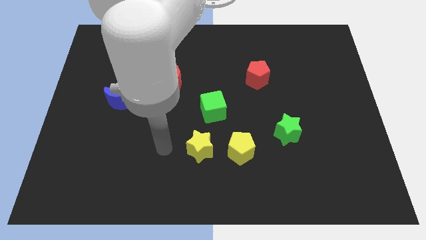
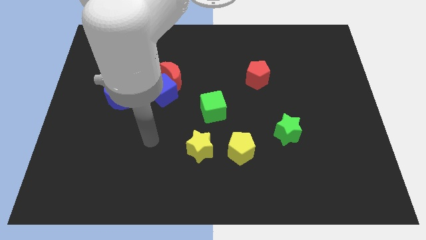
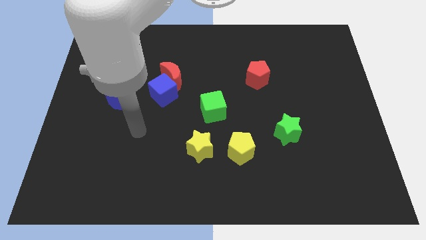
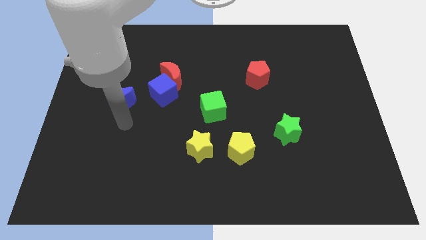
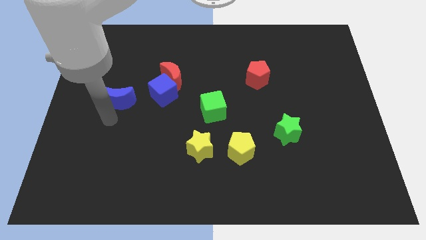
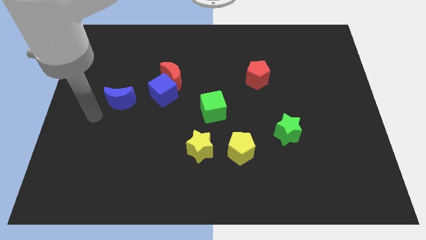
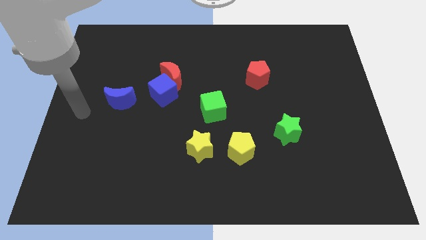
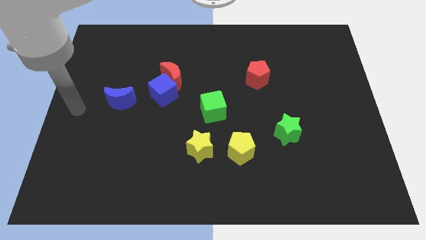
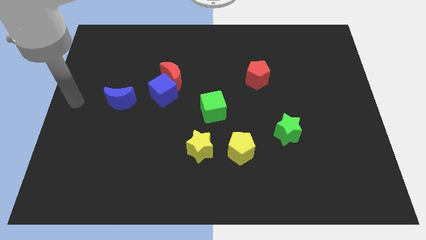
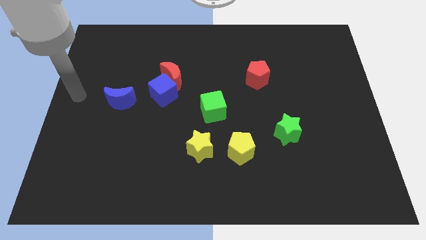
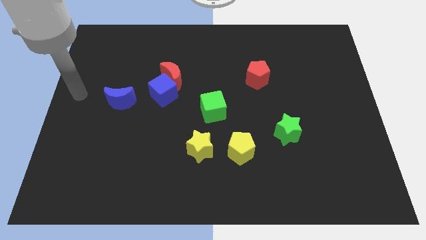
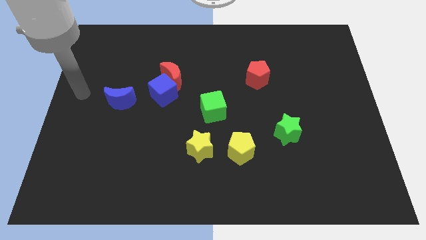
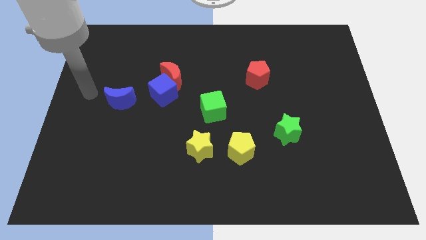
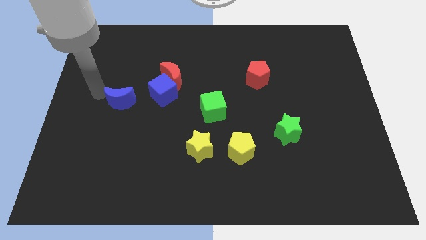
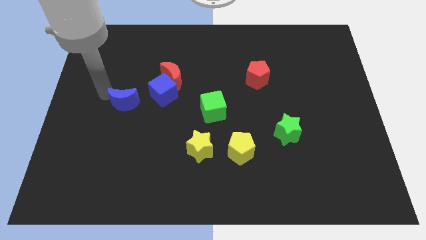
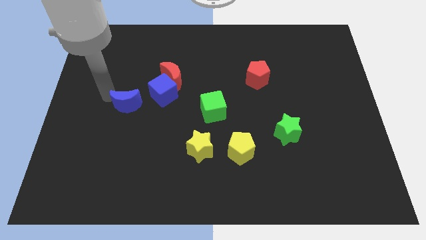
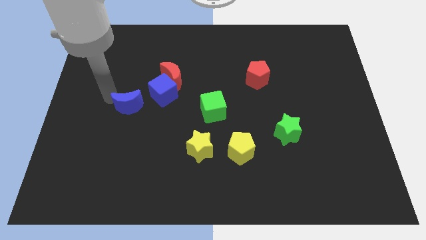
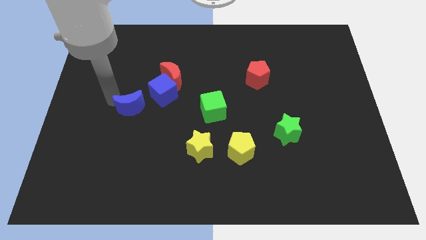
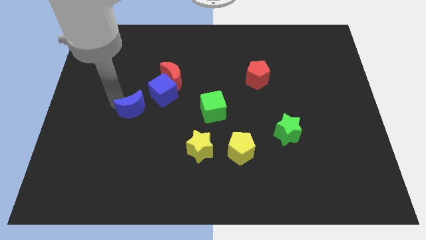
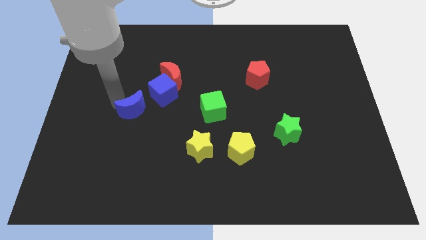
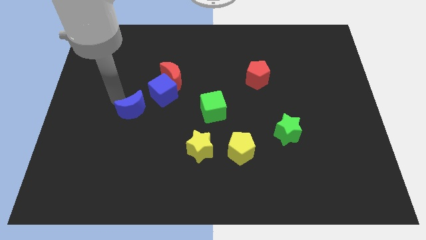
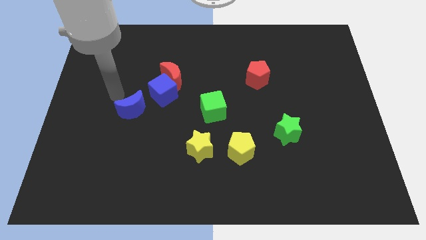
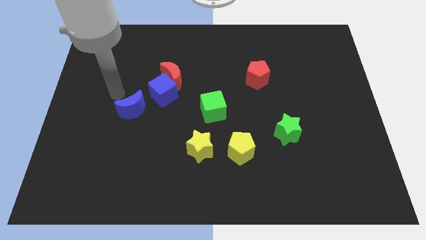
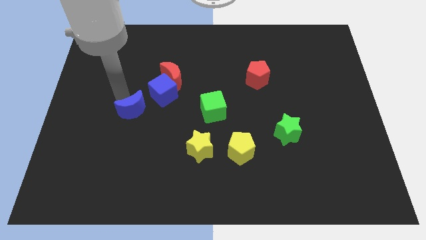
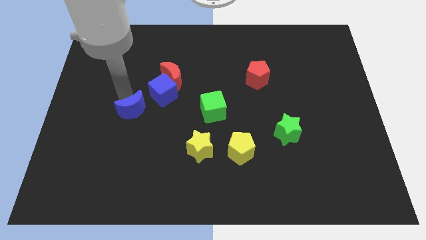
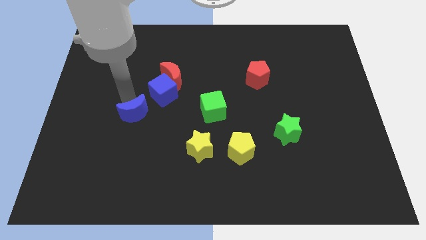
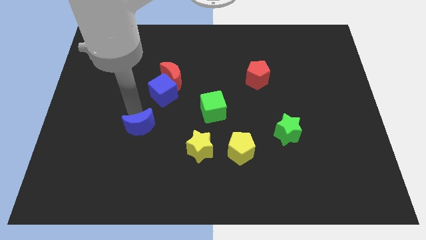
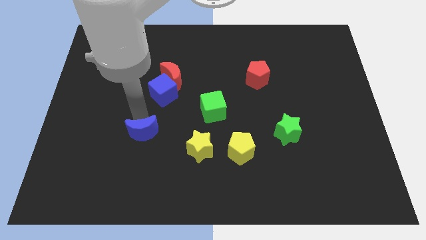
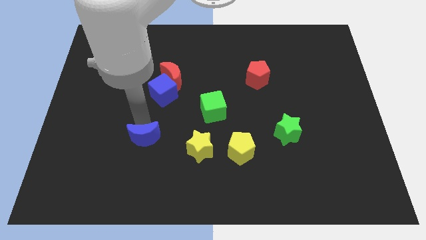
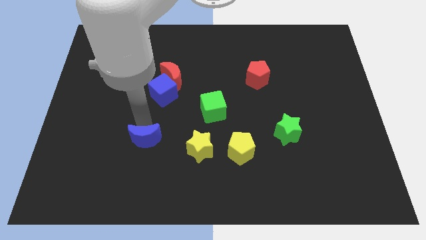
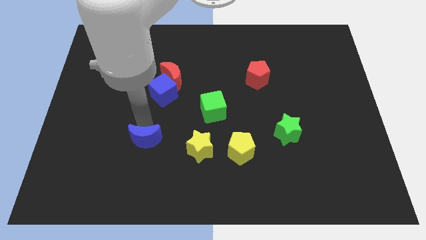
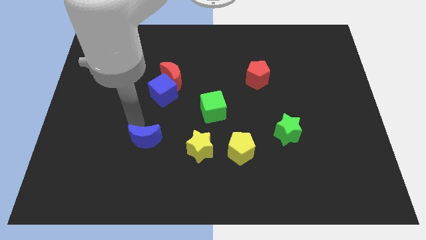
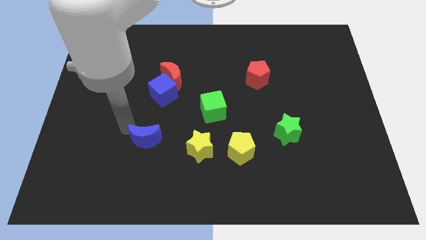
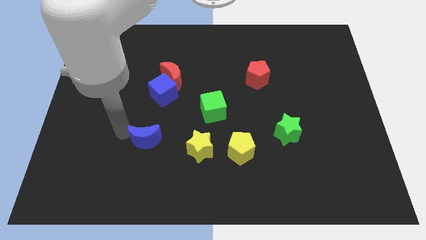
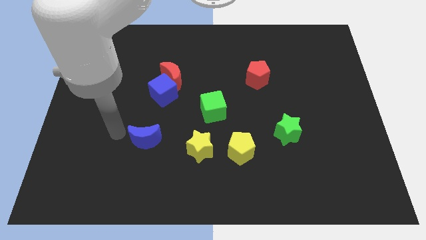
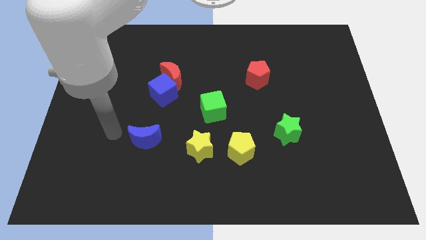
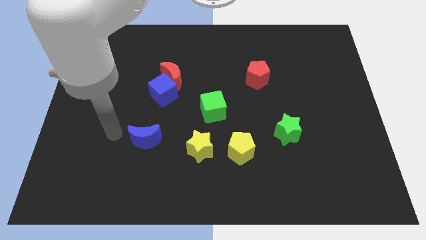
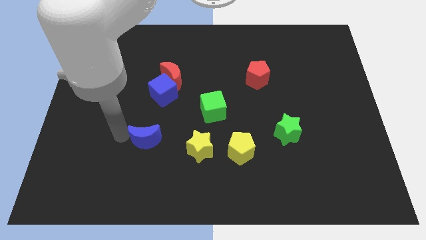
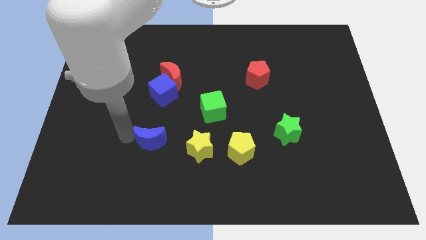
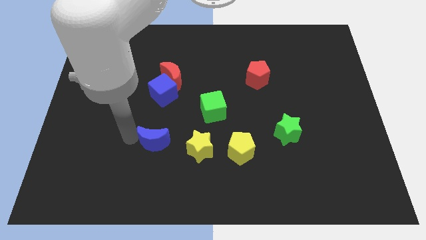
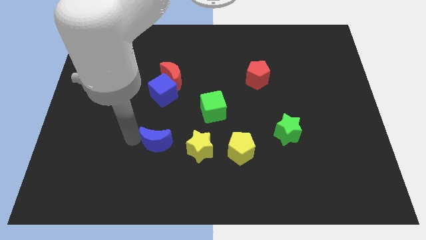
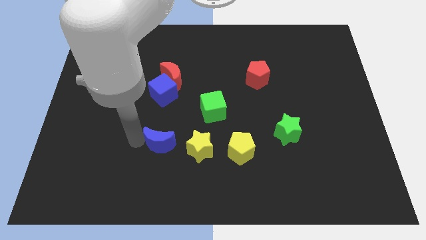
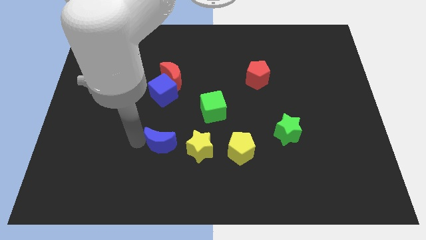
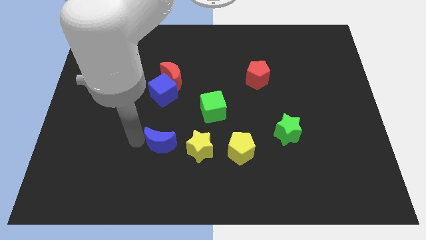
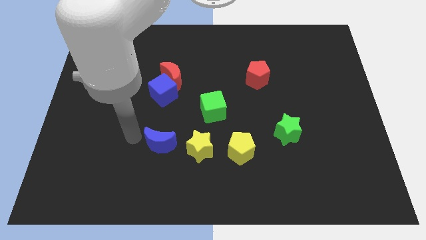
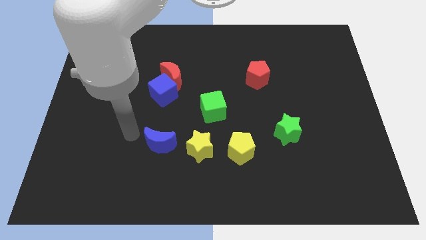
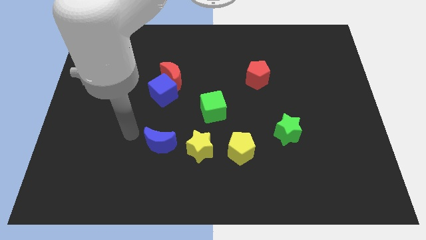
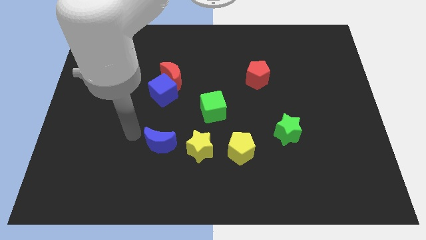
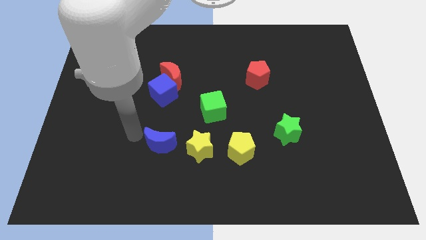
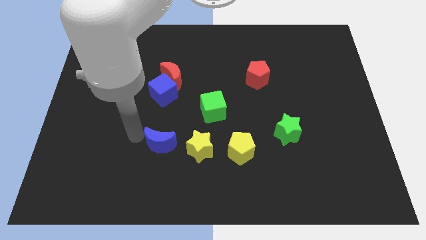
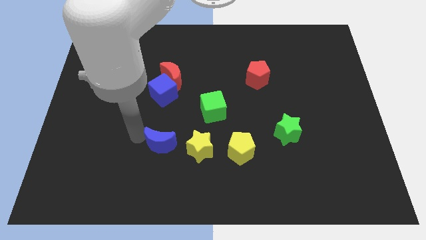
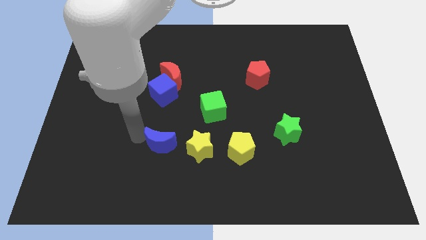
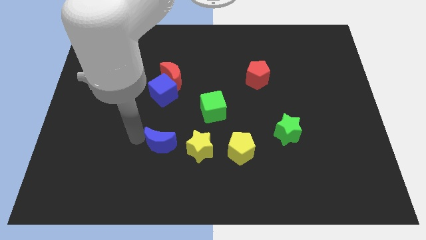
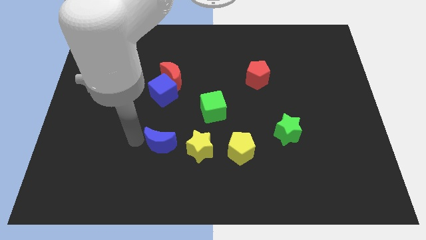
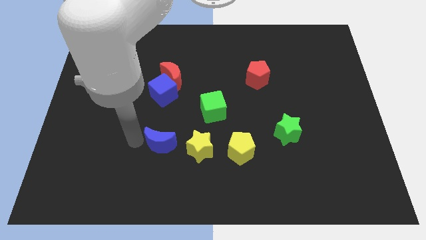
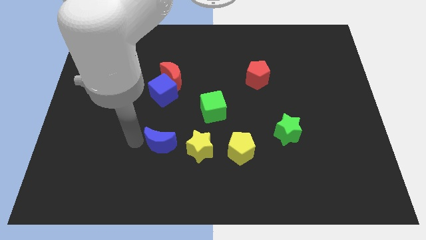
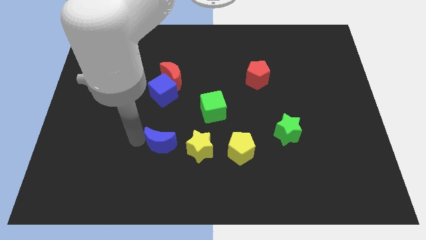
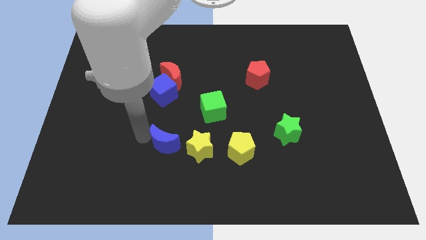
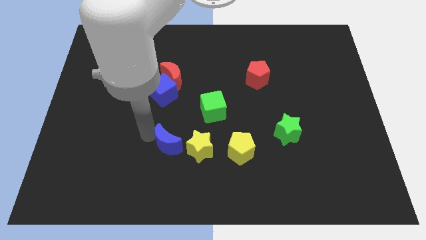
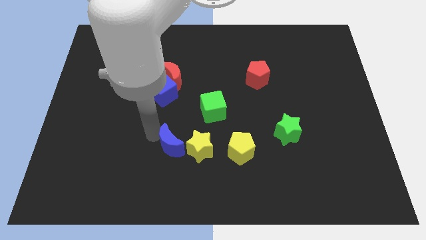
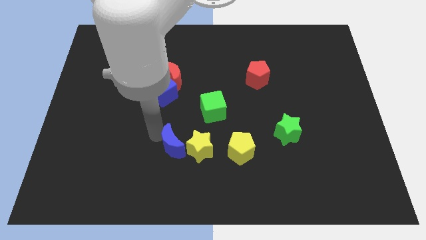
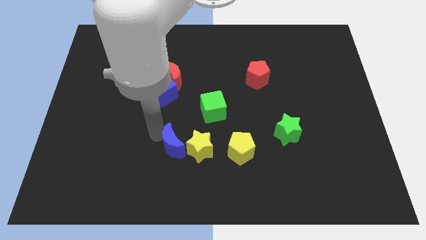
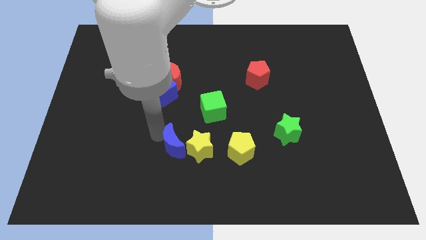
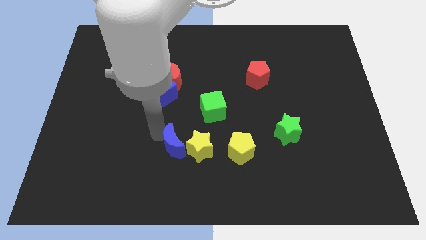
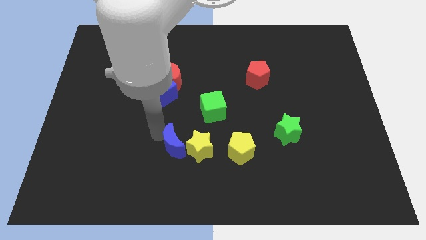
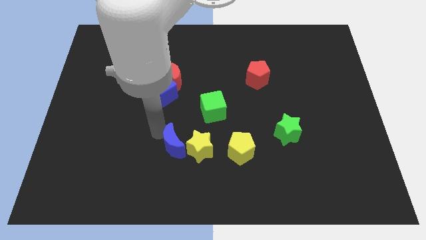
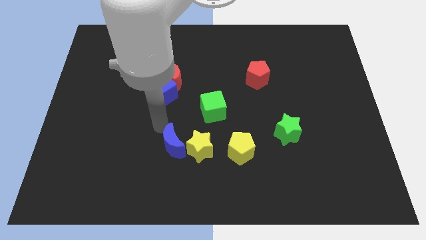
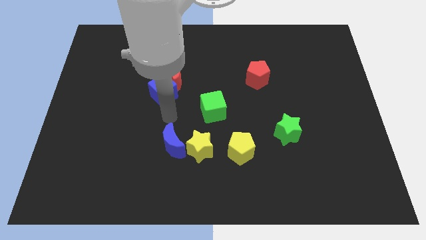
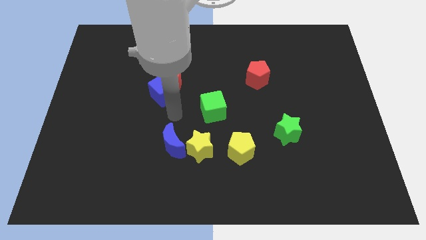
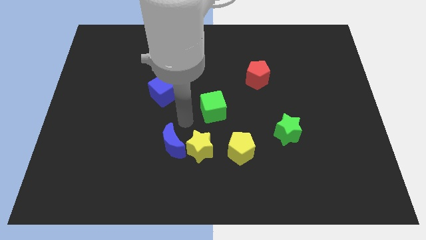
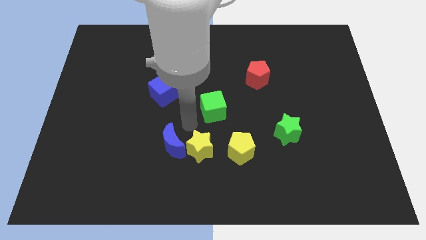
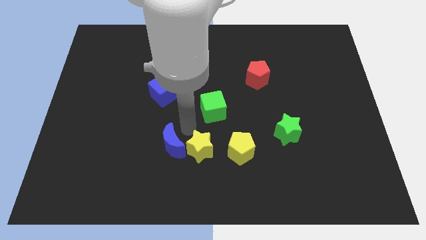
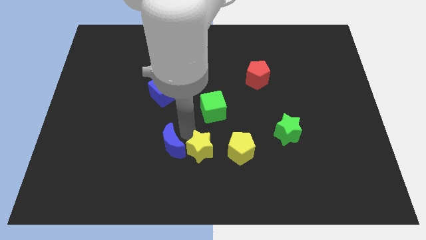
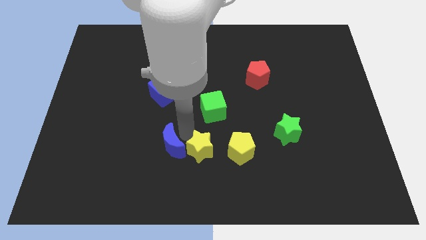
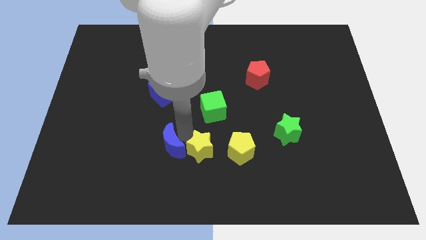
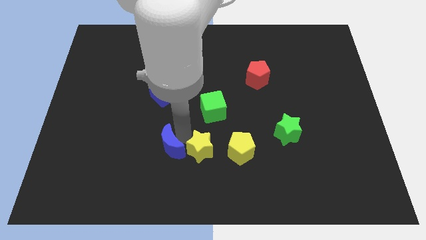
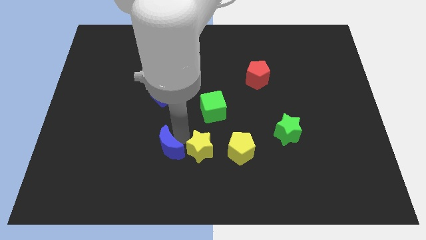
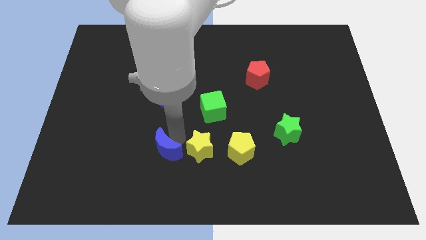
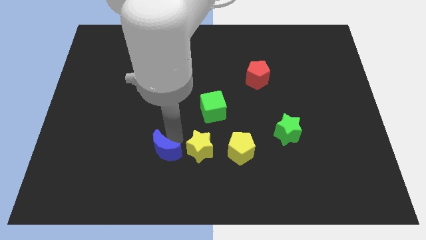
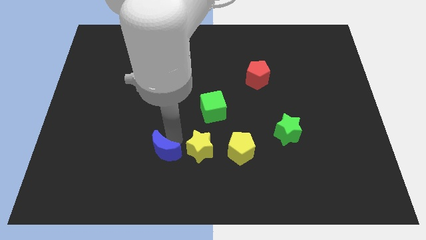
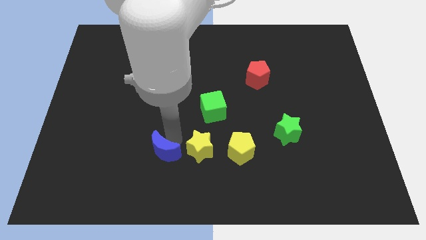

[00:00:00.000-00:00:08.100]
place the blue moon to the left of the yellow star

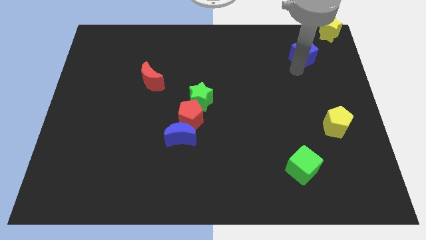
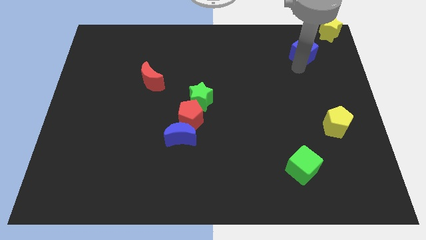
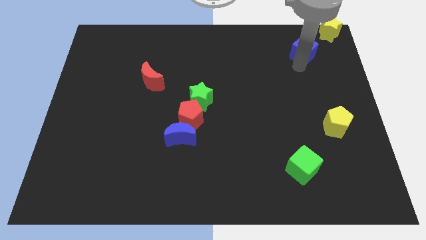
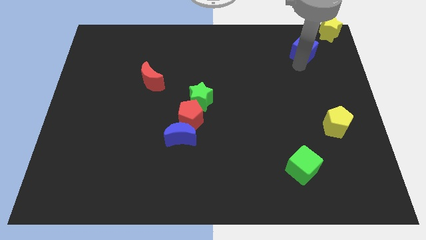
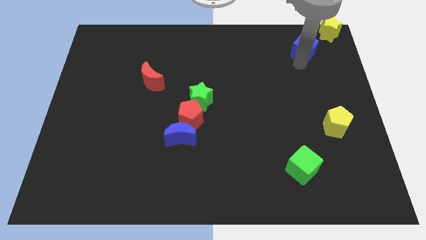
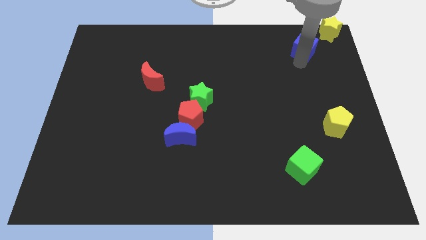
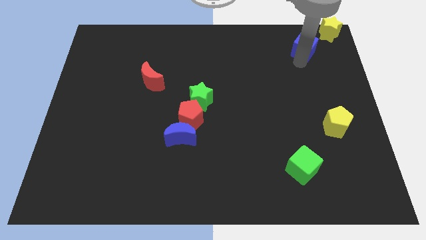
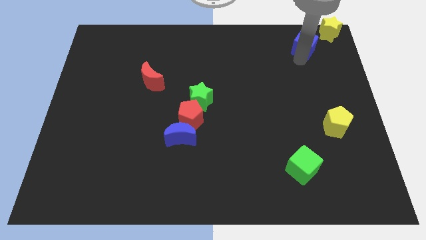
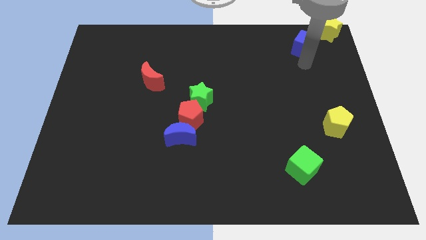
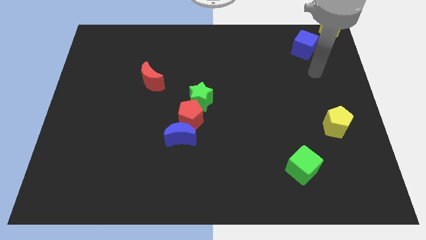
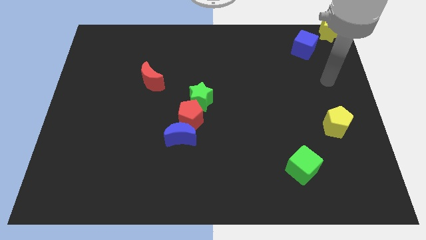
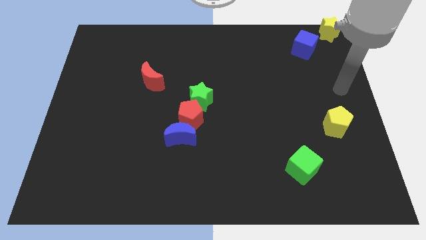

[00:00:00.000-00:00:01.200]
place blue cube in diagonal position with the yellow star
